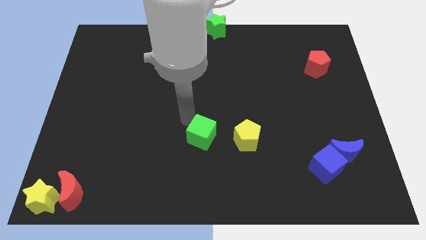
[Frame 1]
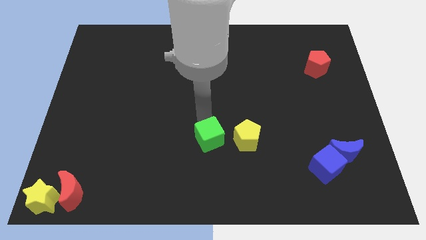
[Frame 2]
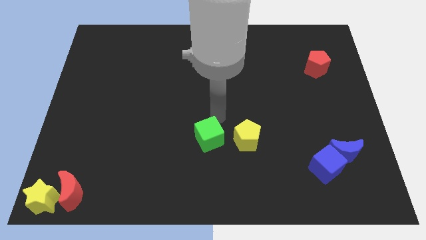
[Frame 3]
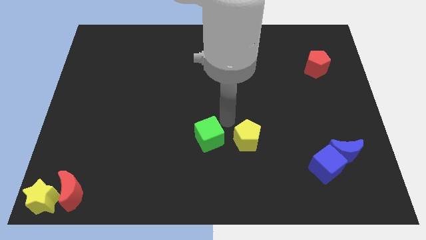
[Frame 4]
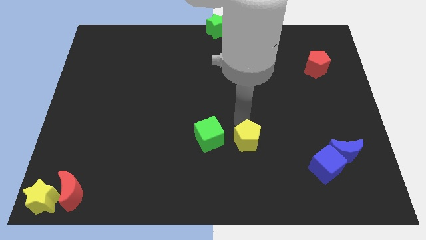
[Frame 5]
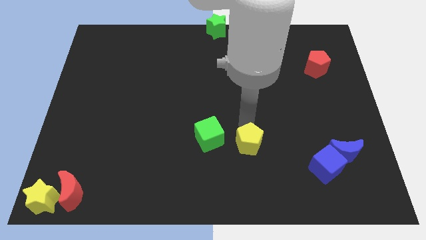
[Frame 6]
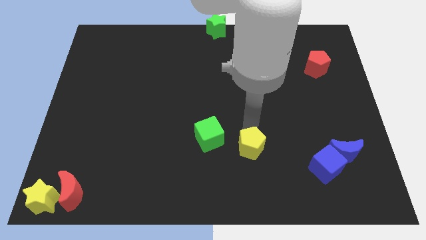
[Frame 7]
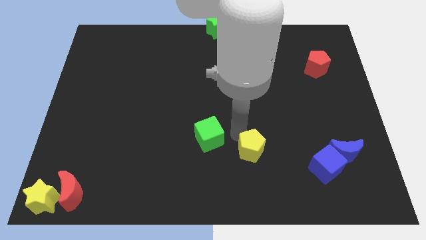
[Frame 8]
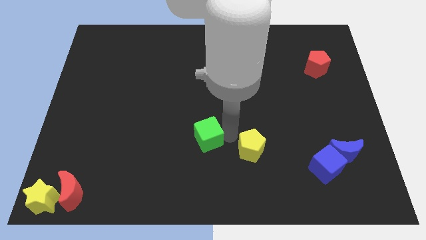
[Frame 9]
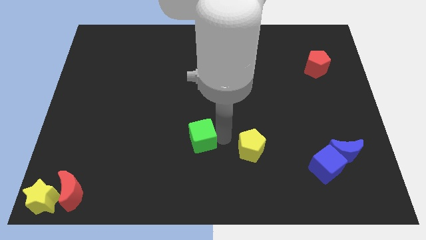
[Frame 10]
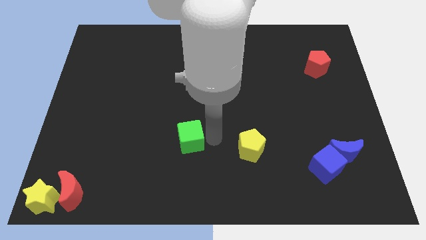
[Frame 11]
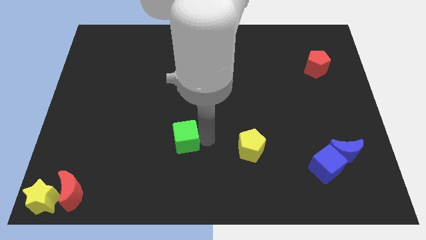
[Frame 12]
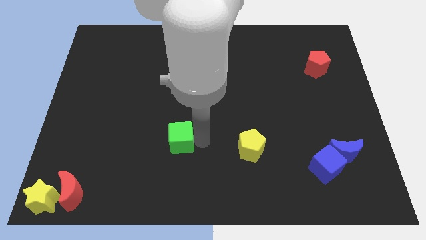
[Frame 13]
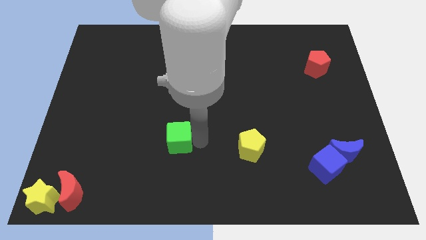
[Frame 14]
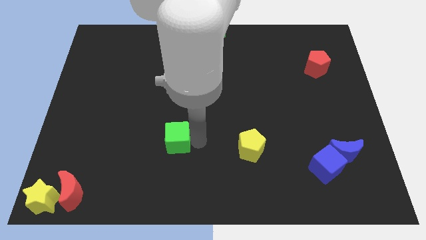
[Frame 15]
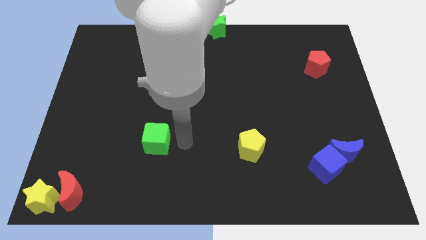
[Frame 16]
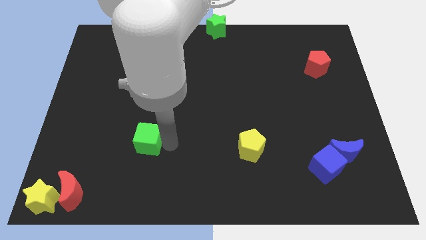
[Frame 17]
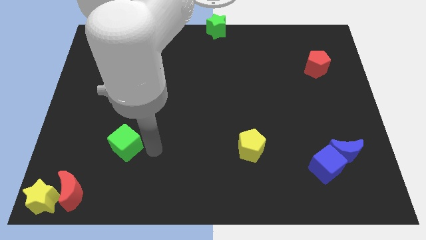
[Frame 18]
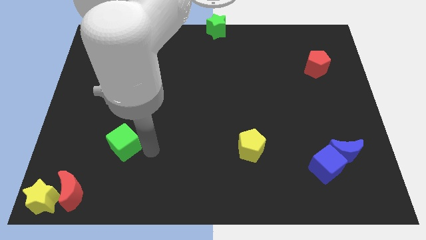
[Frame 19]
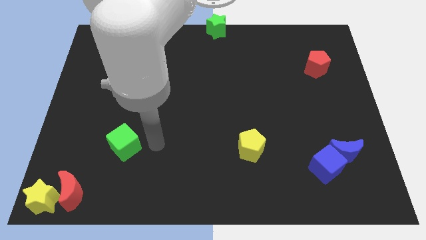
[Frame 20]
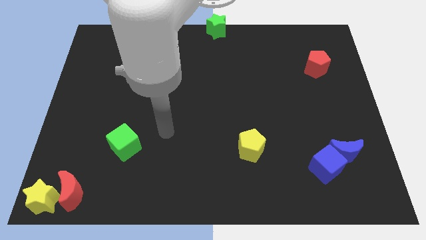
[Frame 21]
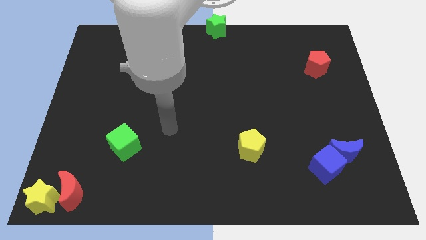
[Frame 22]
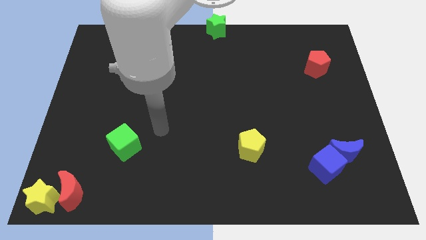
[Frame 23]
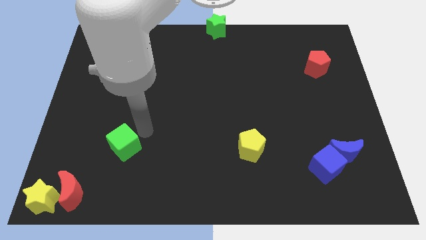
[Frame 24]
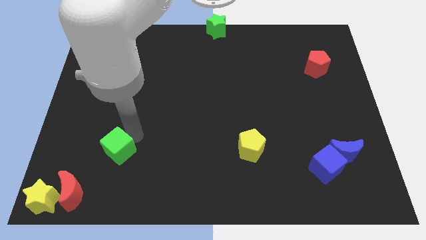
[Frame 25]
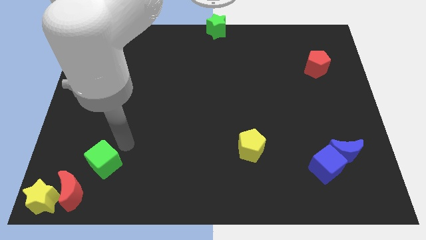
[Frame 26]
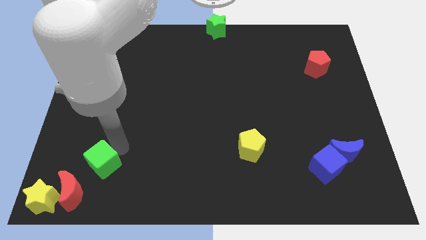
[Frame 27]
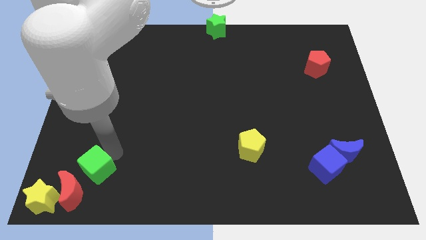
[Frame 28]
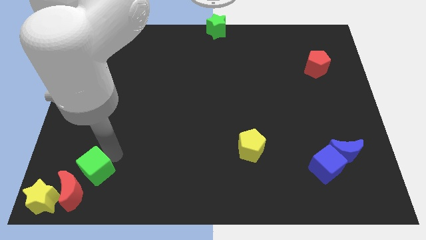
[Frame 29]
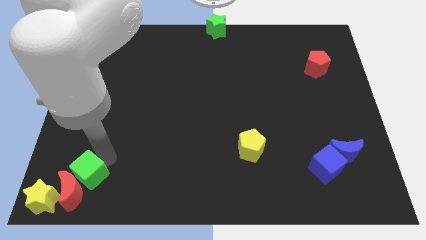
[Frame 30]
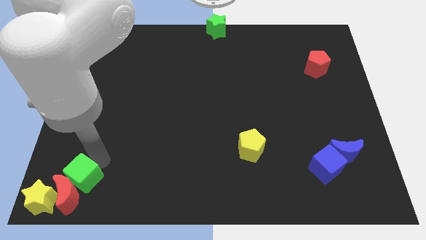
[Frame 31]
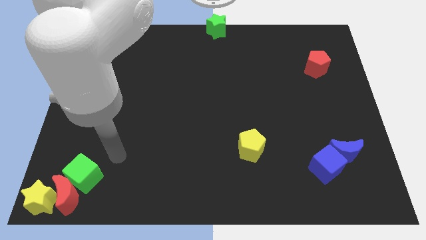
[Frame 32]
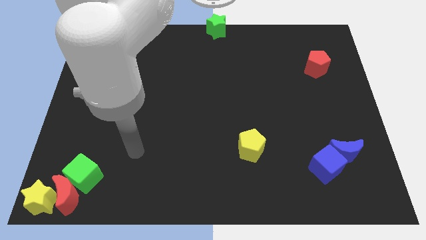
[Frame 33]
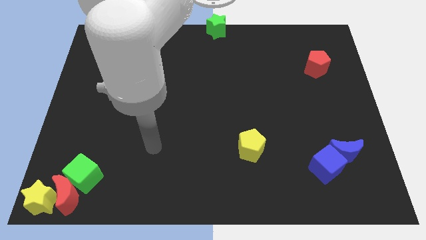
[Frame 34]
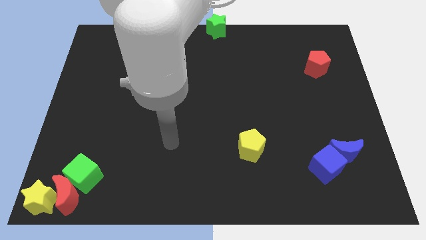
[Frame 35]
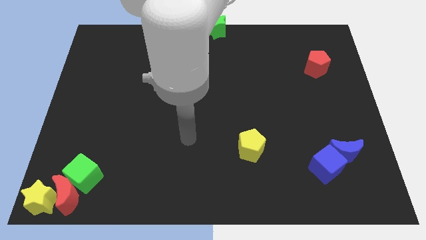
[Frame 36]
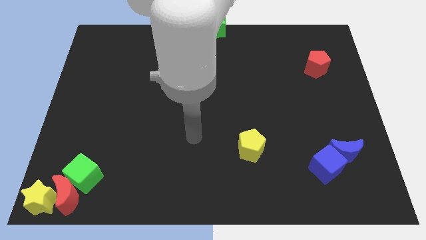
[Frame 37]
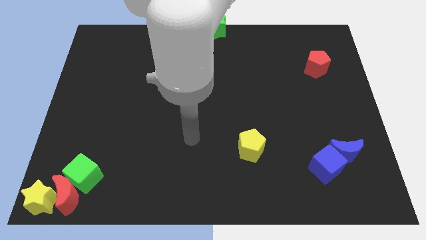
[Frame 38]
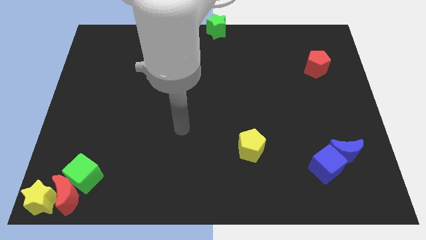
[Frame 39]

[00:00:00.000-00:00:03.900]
push the green cube into the red crescent

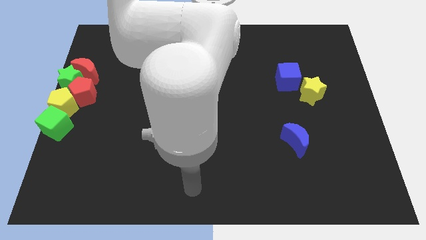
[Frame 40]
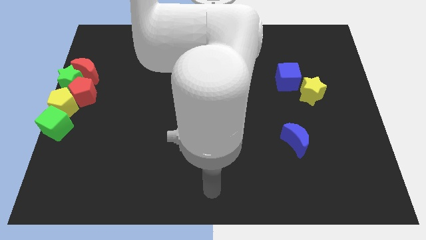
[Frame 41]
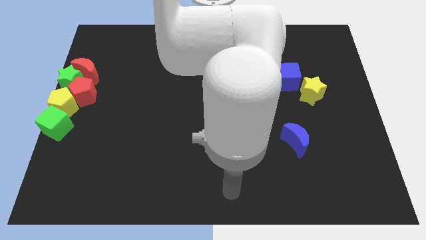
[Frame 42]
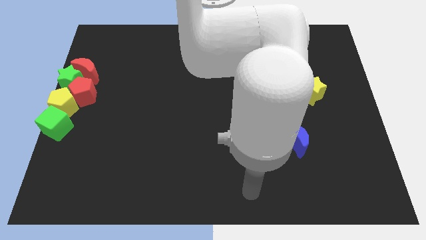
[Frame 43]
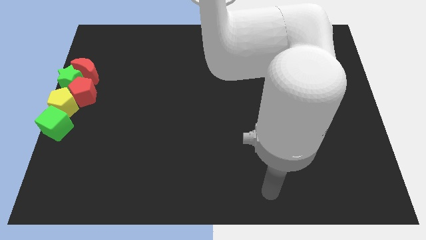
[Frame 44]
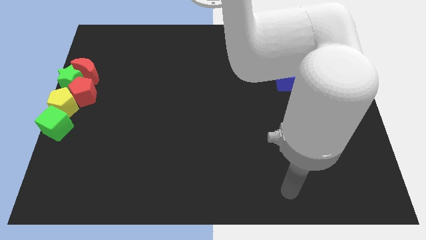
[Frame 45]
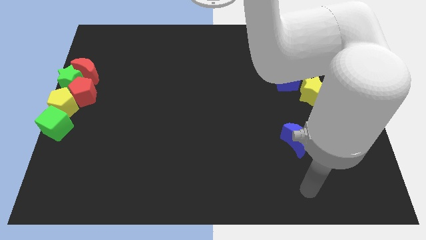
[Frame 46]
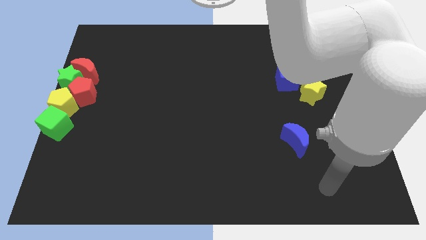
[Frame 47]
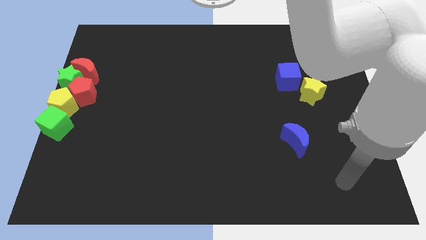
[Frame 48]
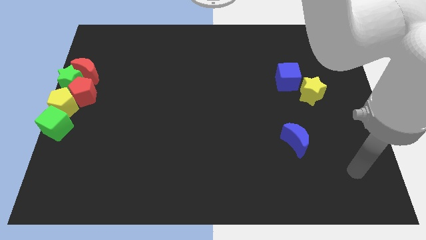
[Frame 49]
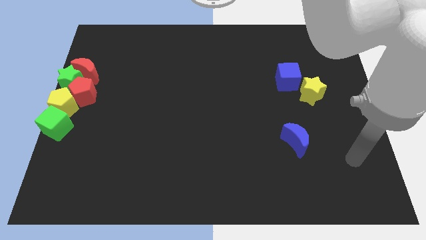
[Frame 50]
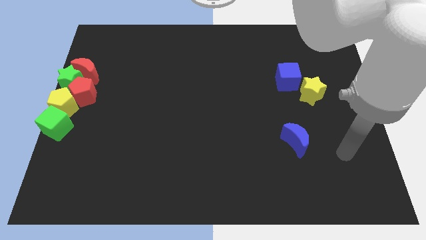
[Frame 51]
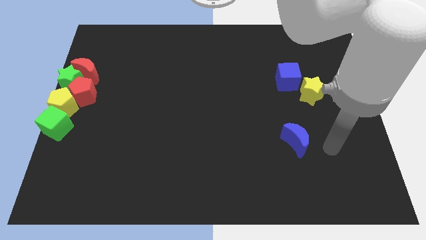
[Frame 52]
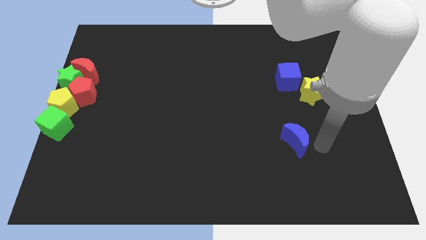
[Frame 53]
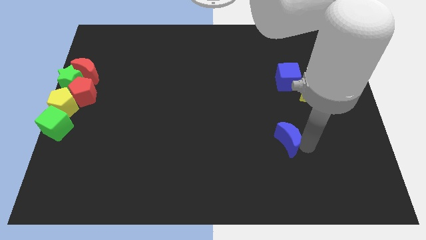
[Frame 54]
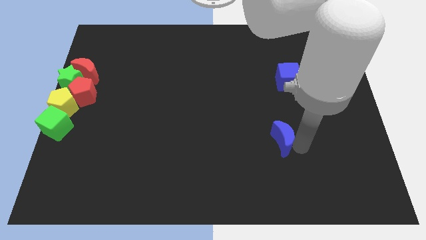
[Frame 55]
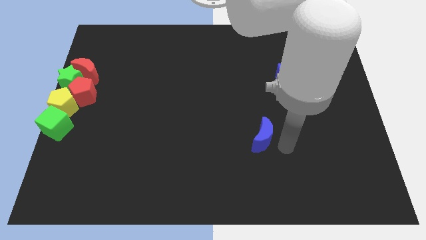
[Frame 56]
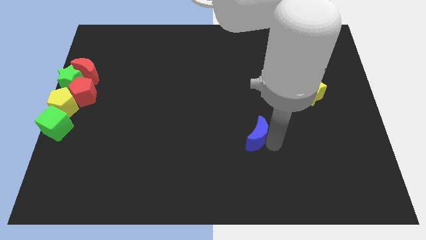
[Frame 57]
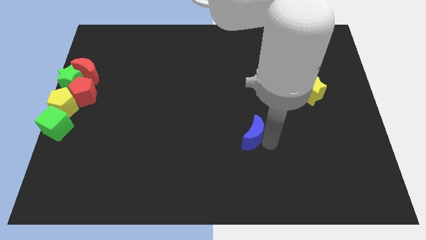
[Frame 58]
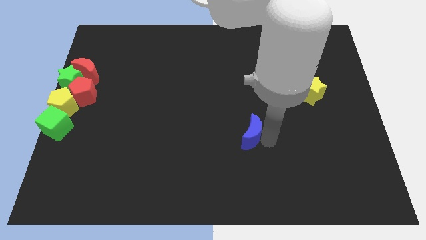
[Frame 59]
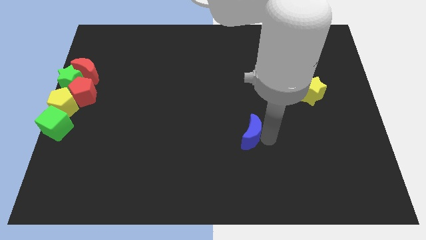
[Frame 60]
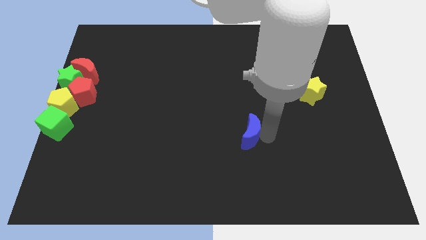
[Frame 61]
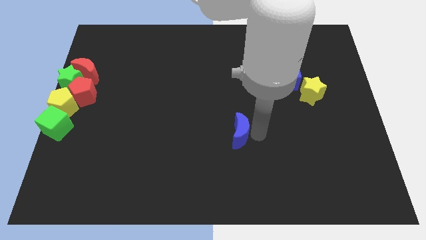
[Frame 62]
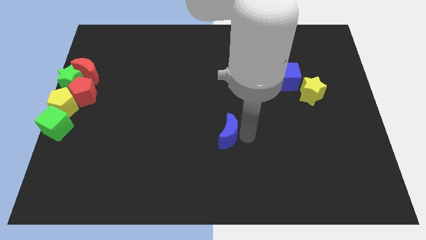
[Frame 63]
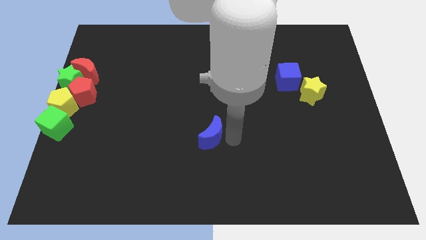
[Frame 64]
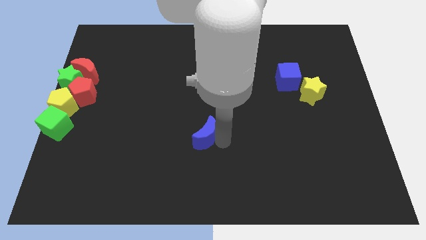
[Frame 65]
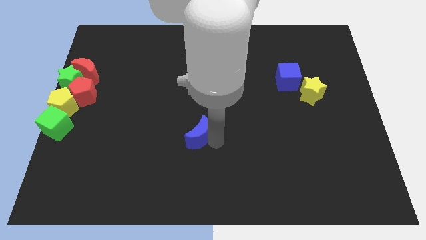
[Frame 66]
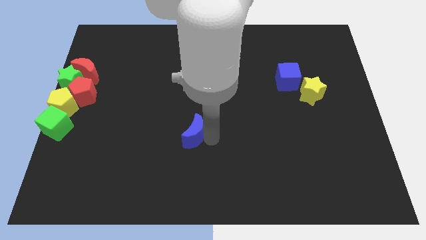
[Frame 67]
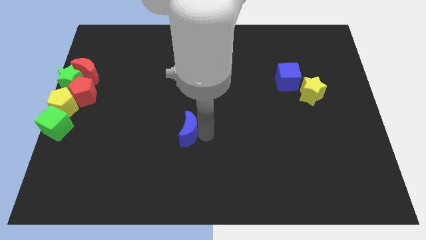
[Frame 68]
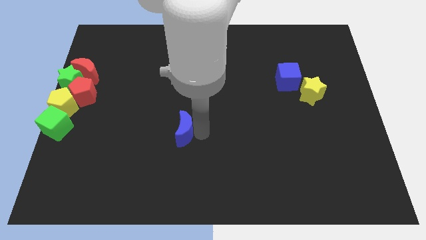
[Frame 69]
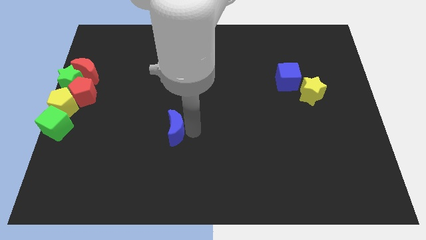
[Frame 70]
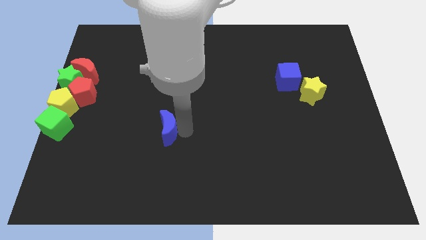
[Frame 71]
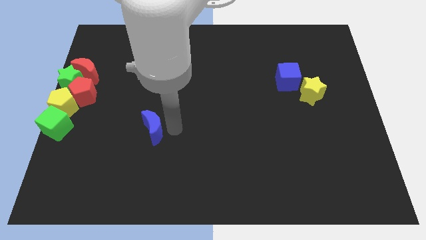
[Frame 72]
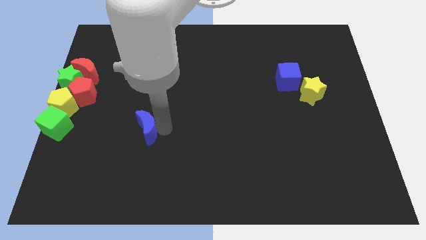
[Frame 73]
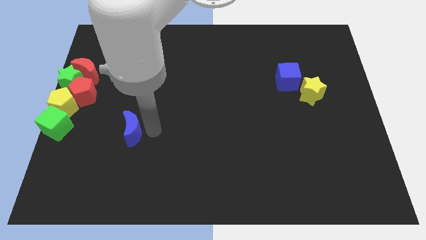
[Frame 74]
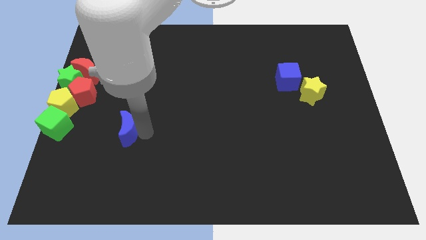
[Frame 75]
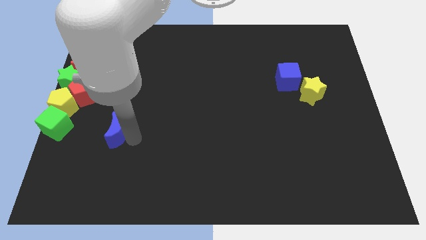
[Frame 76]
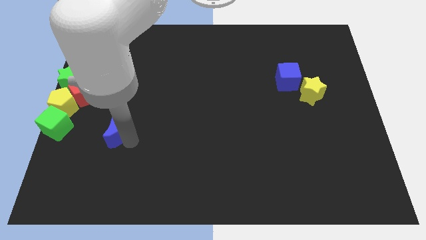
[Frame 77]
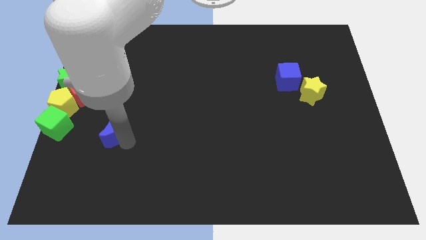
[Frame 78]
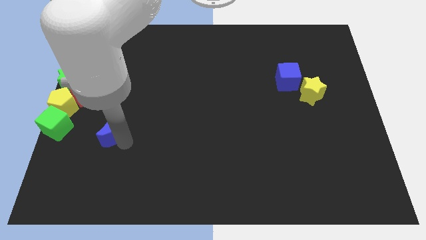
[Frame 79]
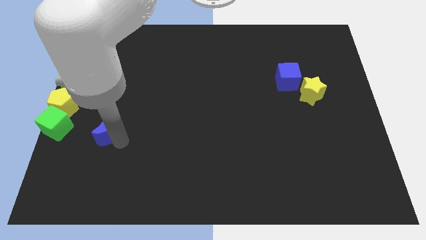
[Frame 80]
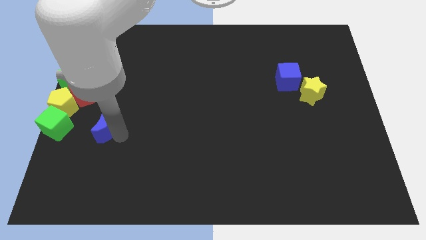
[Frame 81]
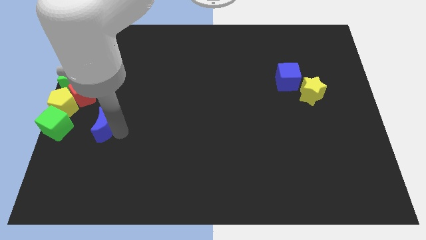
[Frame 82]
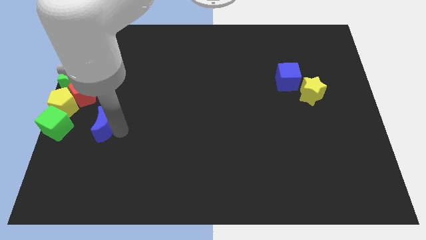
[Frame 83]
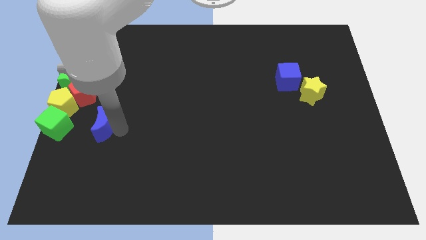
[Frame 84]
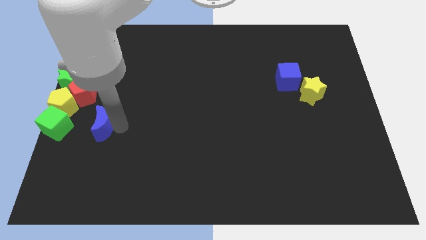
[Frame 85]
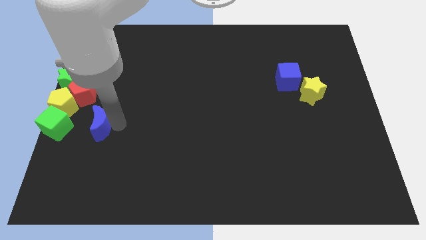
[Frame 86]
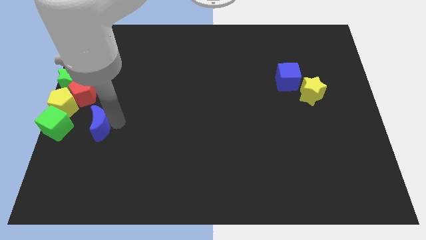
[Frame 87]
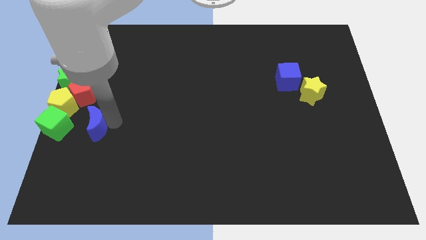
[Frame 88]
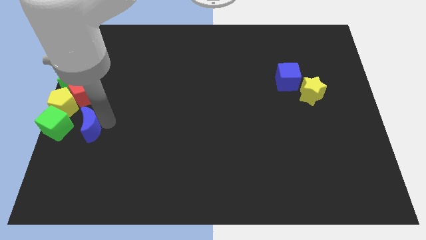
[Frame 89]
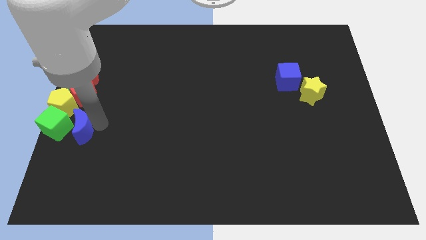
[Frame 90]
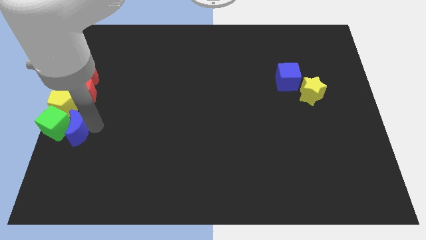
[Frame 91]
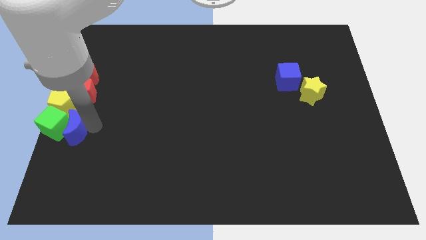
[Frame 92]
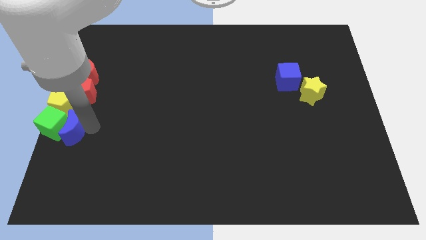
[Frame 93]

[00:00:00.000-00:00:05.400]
push the blue crescent into the green cube
